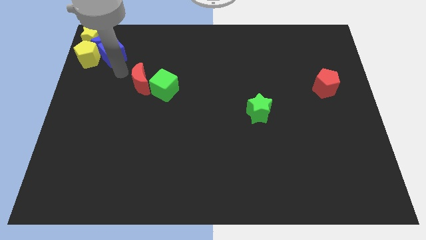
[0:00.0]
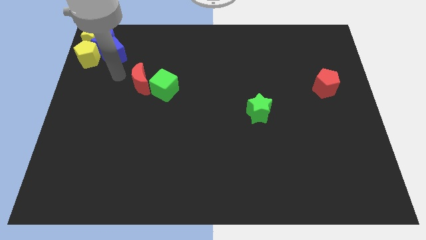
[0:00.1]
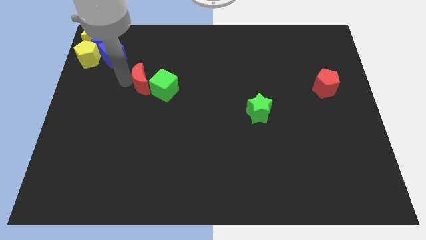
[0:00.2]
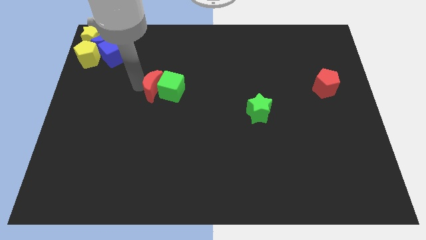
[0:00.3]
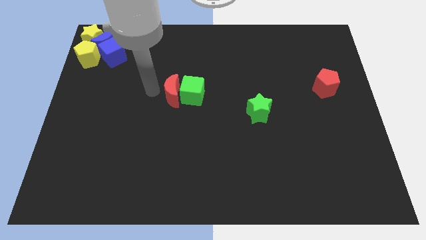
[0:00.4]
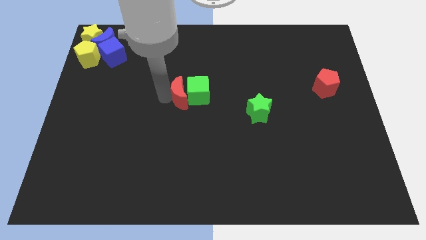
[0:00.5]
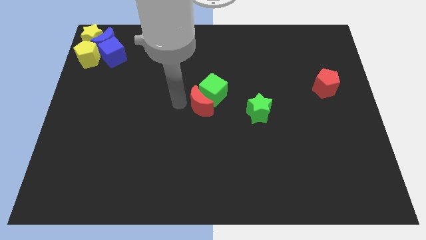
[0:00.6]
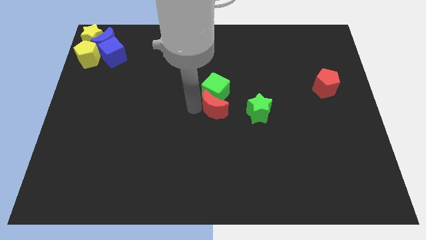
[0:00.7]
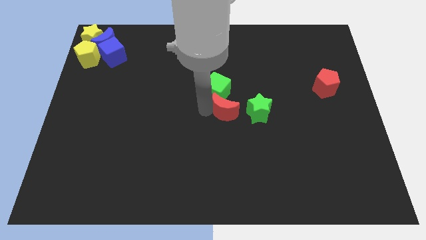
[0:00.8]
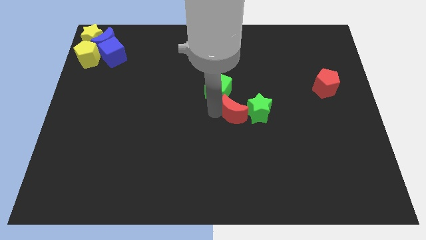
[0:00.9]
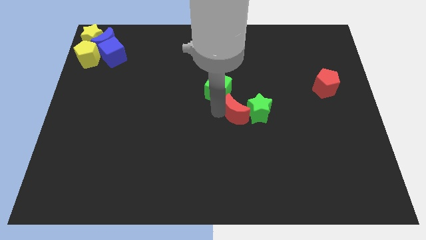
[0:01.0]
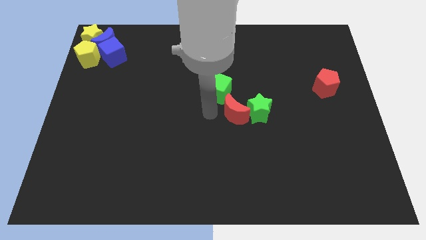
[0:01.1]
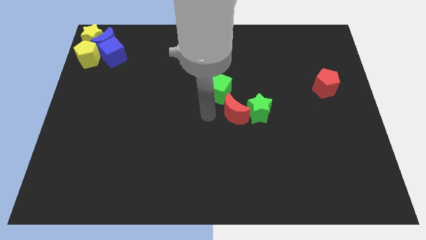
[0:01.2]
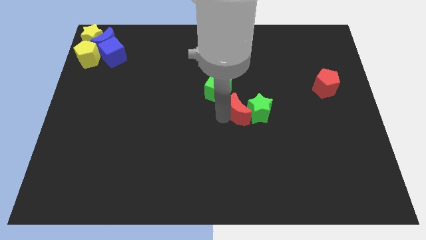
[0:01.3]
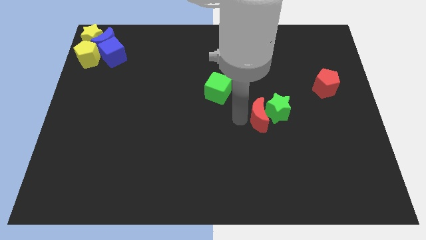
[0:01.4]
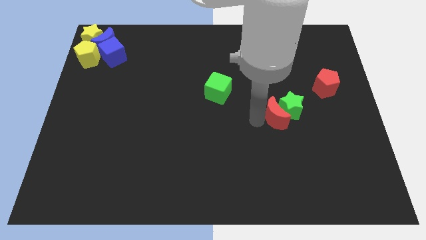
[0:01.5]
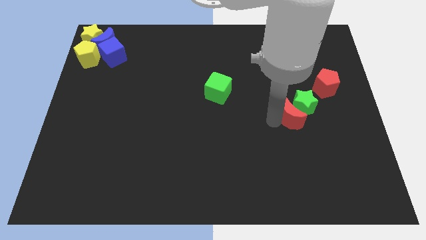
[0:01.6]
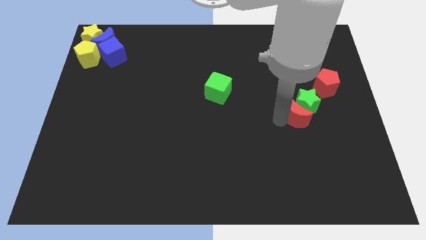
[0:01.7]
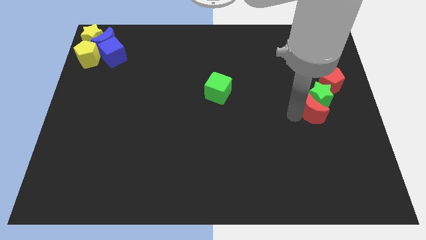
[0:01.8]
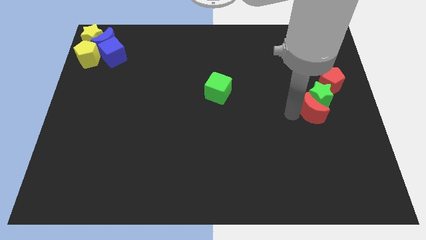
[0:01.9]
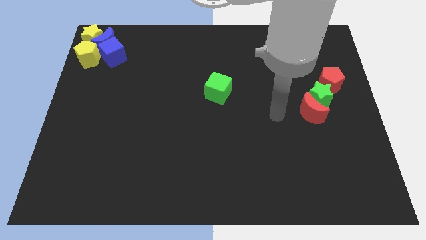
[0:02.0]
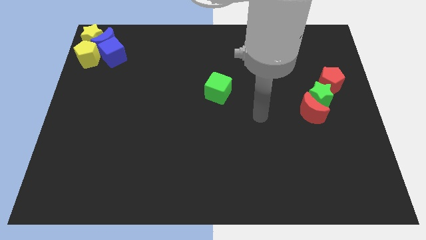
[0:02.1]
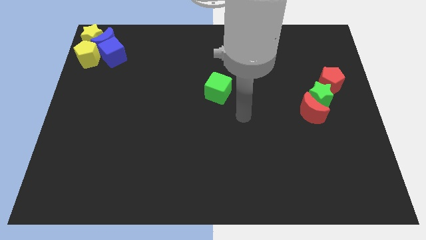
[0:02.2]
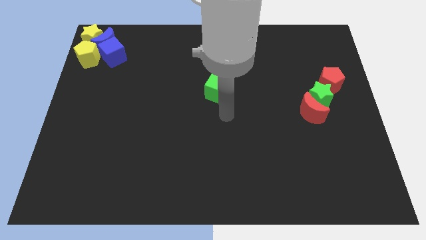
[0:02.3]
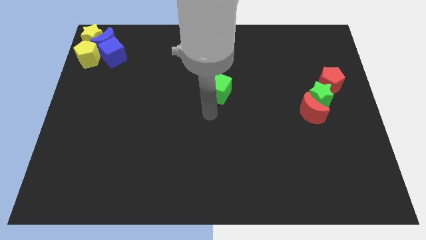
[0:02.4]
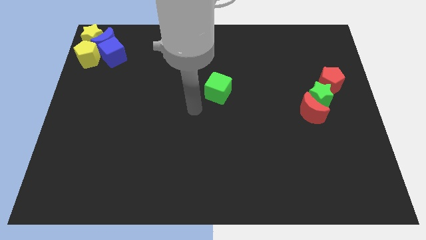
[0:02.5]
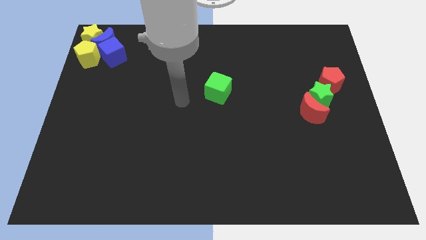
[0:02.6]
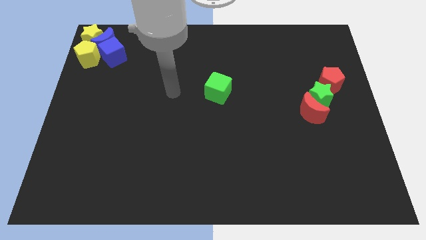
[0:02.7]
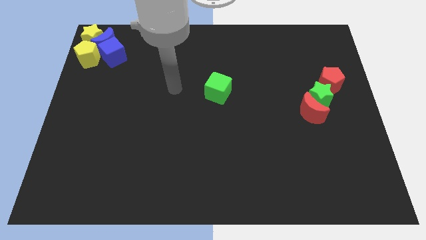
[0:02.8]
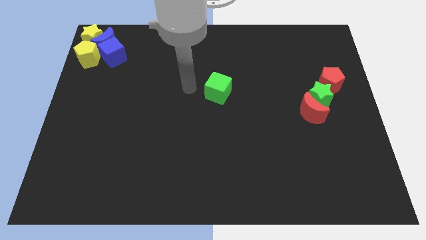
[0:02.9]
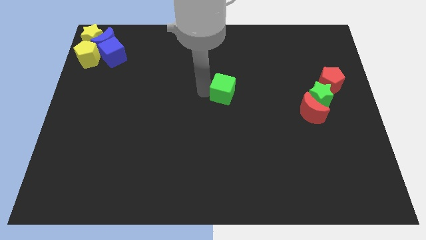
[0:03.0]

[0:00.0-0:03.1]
place the green star diagonally in between red pentagon and red moon

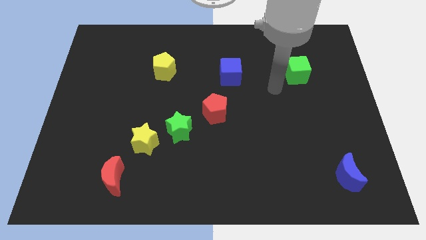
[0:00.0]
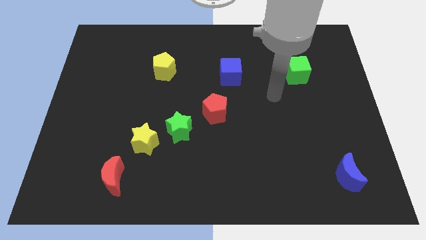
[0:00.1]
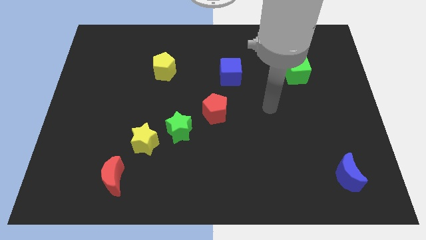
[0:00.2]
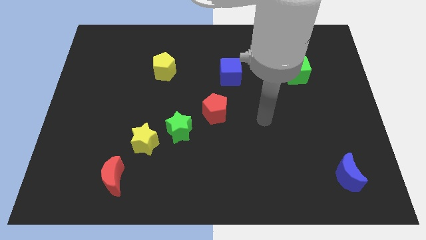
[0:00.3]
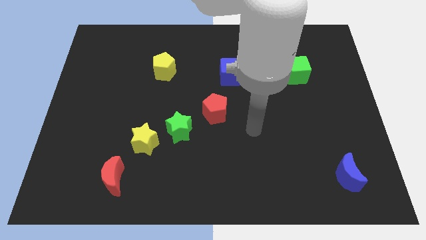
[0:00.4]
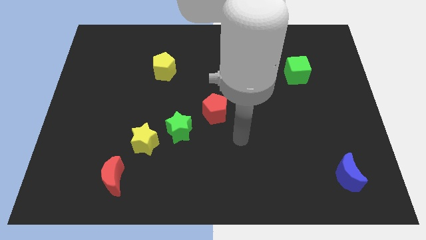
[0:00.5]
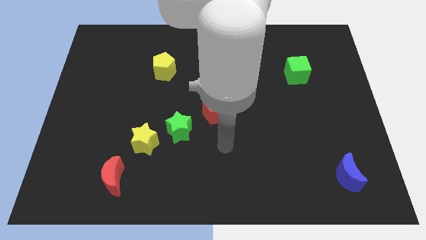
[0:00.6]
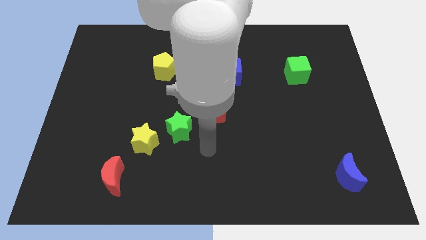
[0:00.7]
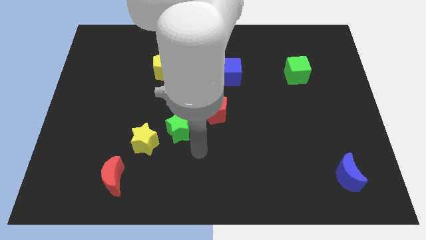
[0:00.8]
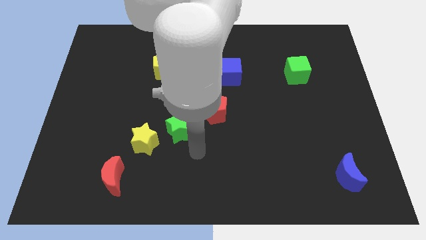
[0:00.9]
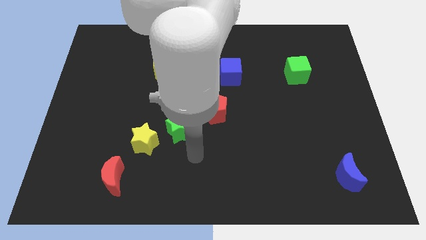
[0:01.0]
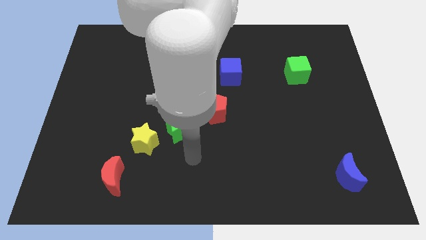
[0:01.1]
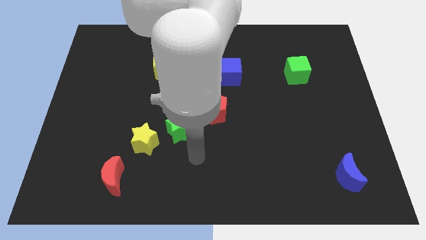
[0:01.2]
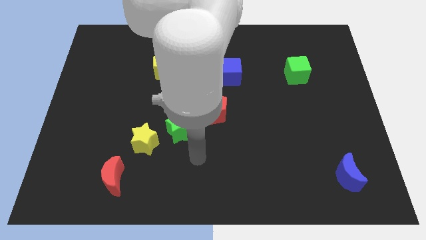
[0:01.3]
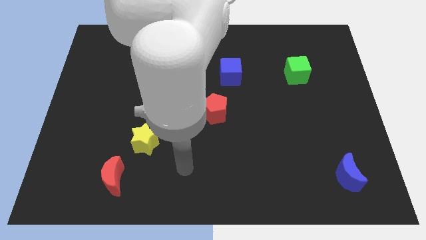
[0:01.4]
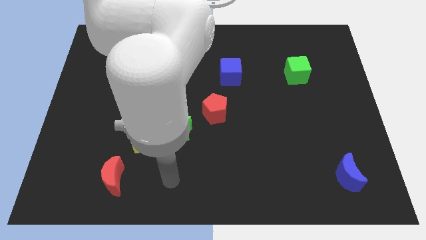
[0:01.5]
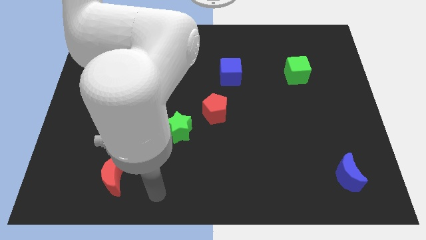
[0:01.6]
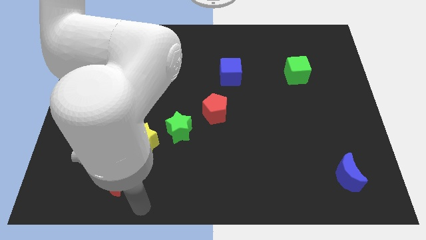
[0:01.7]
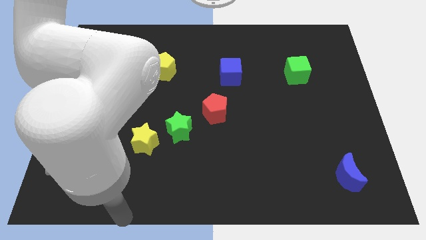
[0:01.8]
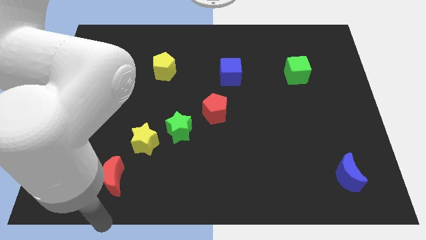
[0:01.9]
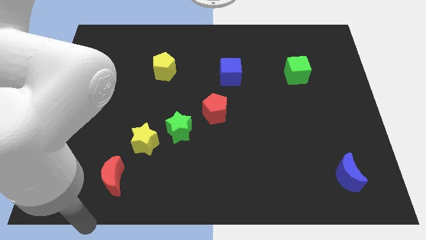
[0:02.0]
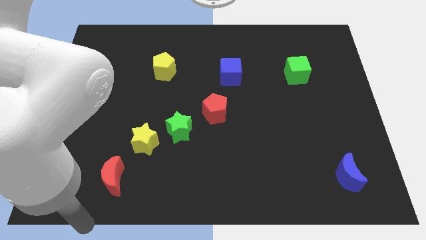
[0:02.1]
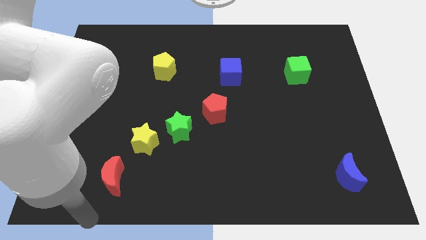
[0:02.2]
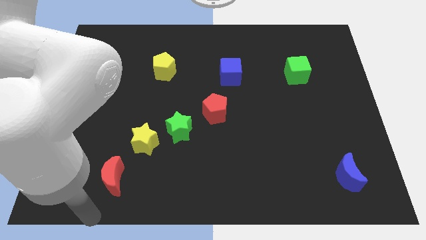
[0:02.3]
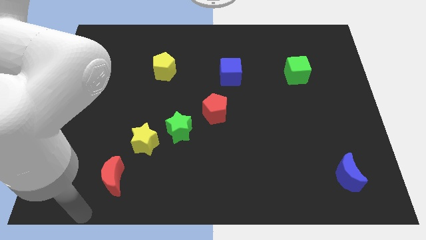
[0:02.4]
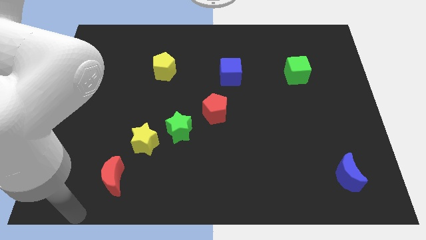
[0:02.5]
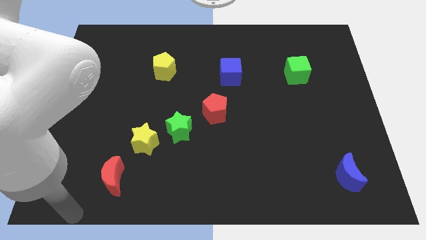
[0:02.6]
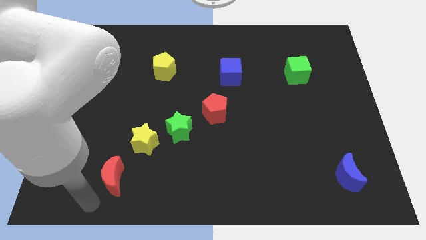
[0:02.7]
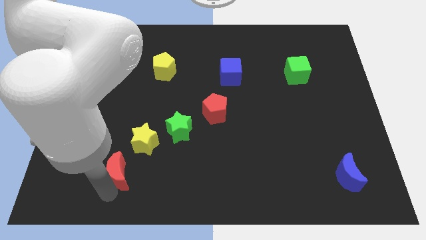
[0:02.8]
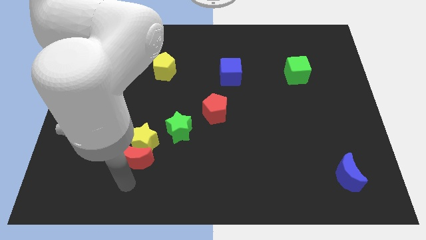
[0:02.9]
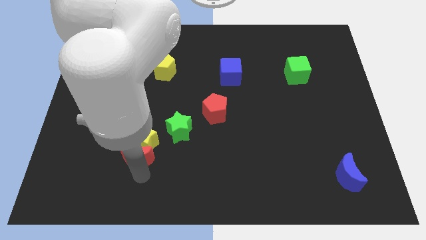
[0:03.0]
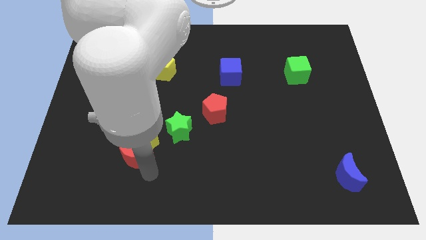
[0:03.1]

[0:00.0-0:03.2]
move the red crescent below the yellow star

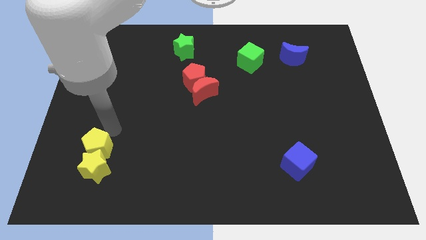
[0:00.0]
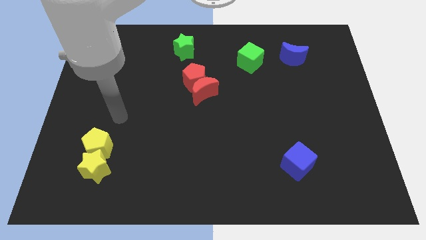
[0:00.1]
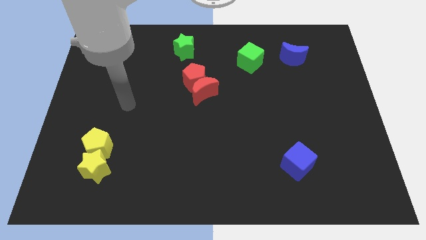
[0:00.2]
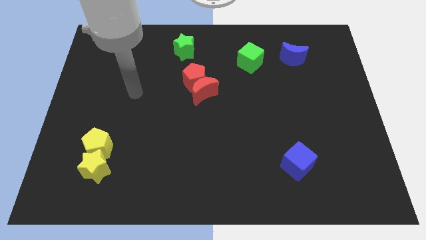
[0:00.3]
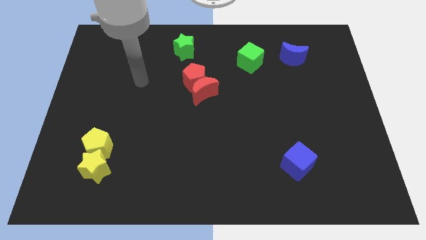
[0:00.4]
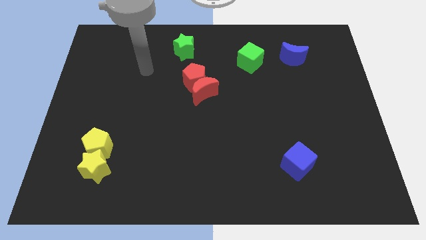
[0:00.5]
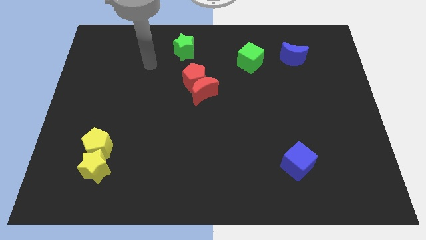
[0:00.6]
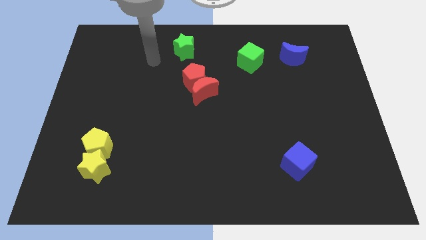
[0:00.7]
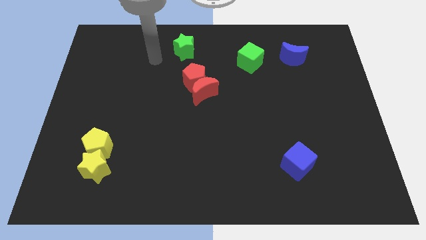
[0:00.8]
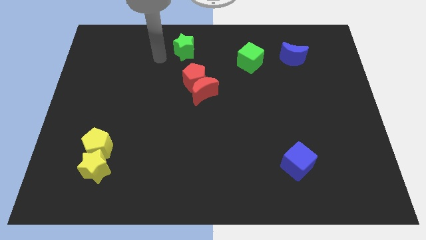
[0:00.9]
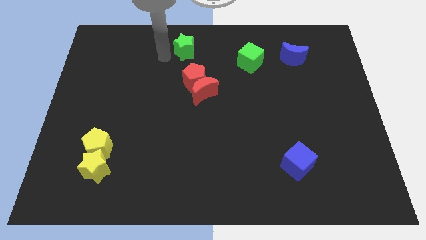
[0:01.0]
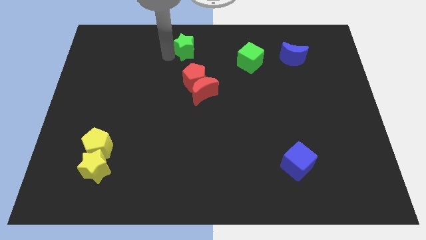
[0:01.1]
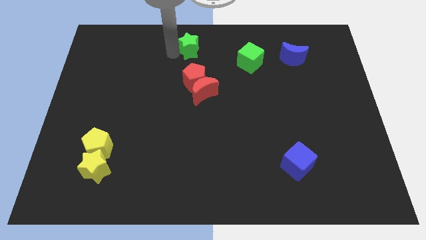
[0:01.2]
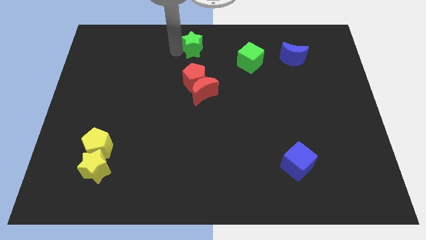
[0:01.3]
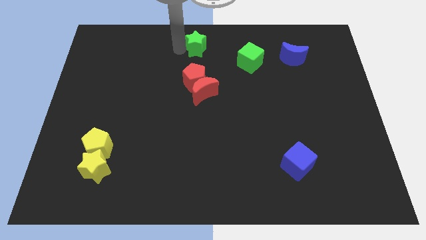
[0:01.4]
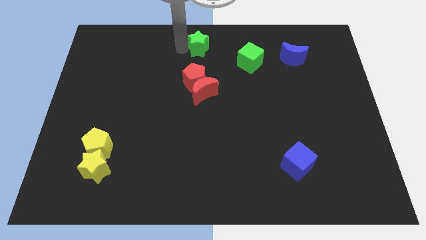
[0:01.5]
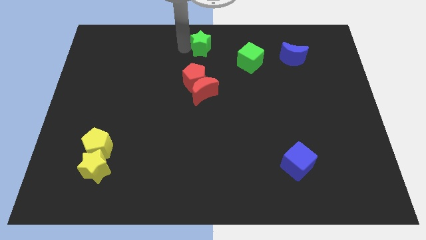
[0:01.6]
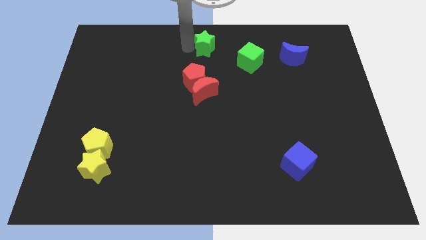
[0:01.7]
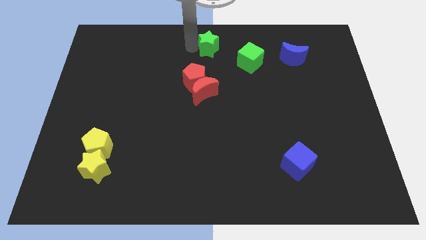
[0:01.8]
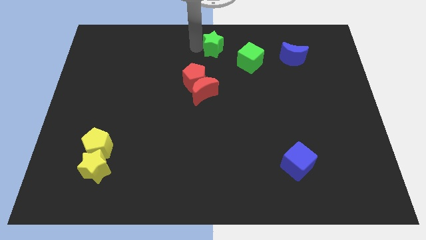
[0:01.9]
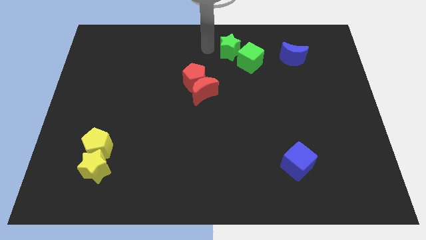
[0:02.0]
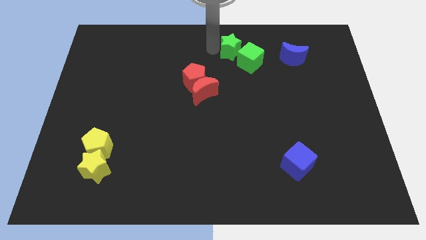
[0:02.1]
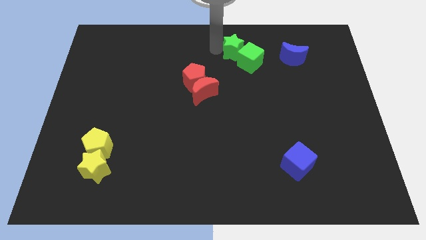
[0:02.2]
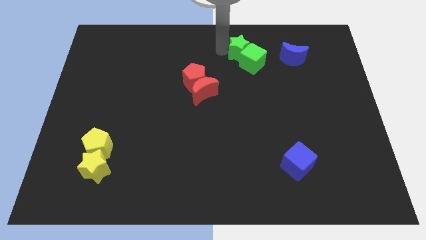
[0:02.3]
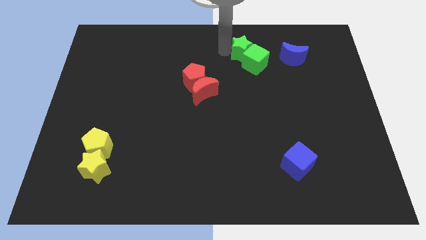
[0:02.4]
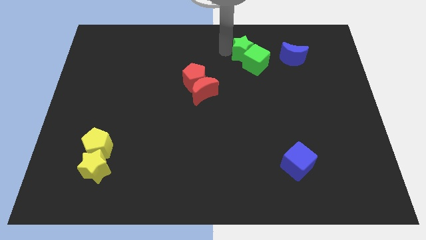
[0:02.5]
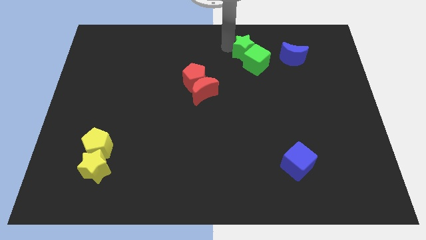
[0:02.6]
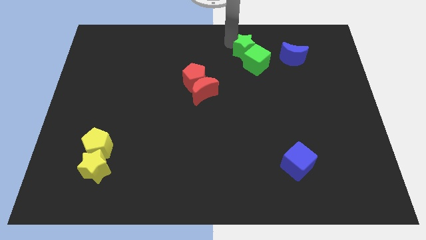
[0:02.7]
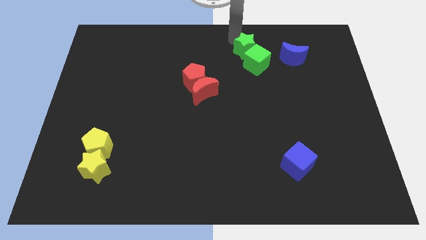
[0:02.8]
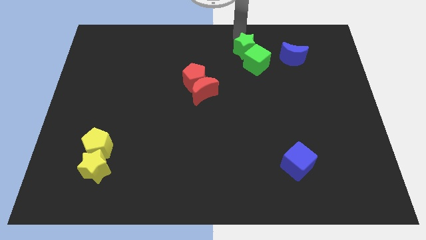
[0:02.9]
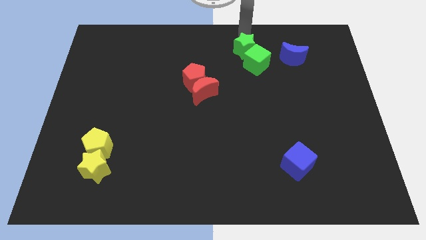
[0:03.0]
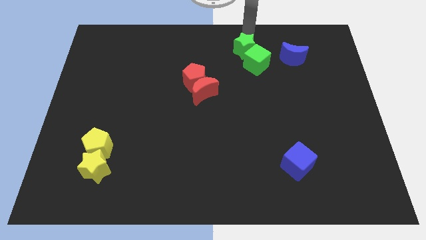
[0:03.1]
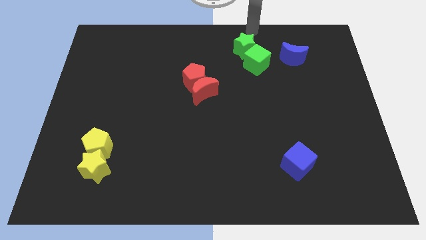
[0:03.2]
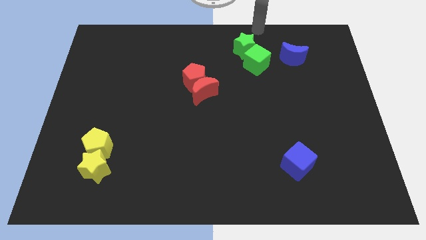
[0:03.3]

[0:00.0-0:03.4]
move the green star into the green cube
